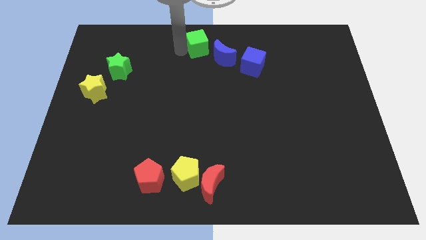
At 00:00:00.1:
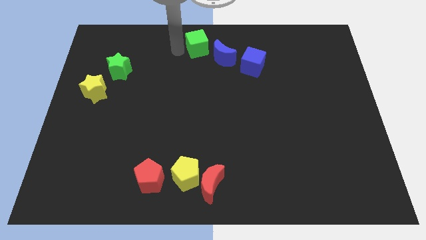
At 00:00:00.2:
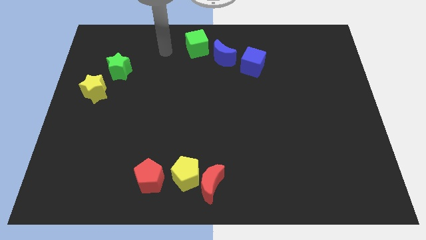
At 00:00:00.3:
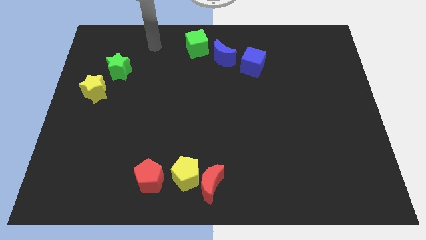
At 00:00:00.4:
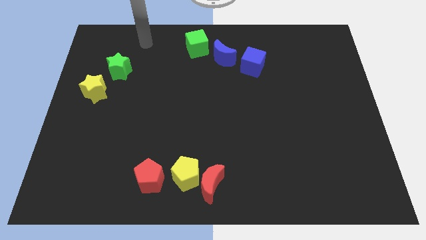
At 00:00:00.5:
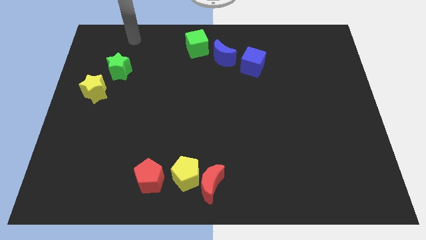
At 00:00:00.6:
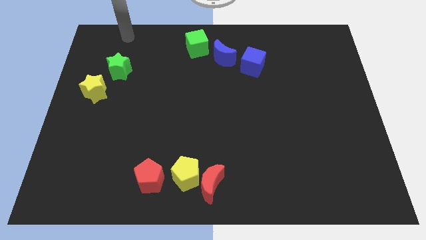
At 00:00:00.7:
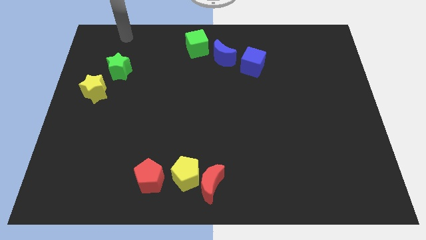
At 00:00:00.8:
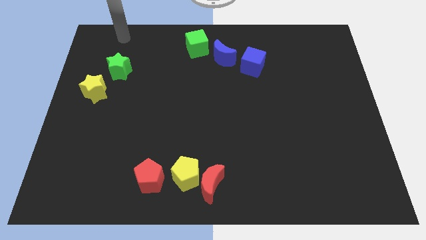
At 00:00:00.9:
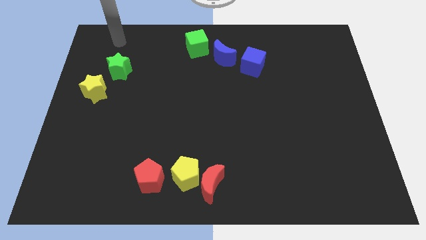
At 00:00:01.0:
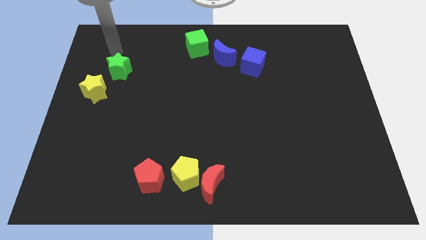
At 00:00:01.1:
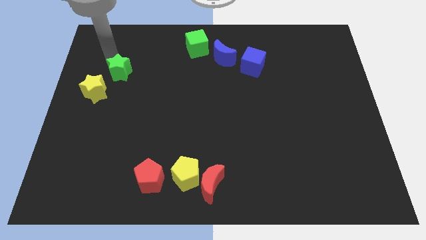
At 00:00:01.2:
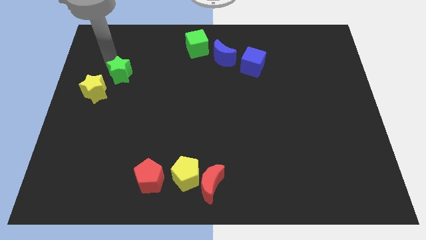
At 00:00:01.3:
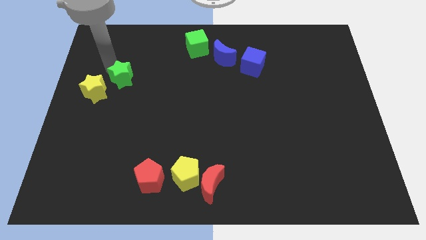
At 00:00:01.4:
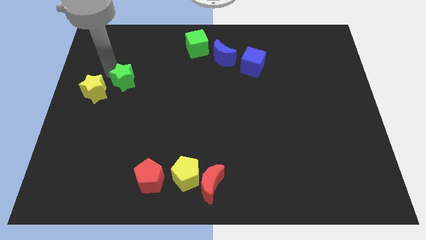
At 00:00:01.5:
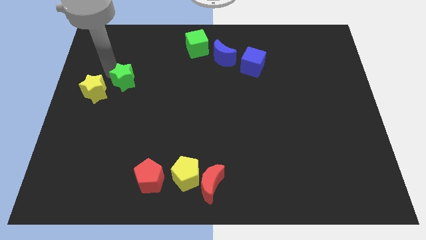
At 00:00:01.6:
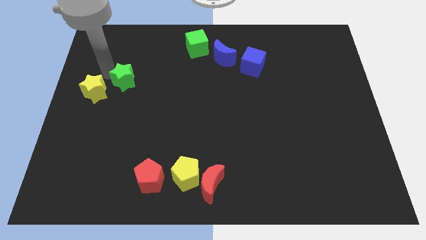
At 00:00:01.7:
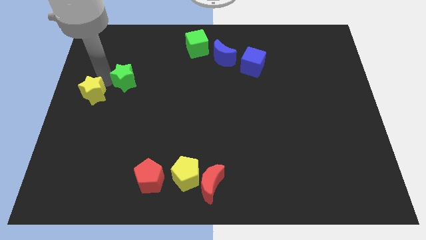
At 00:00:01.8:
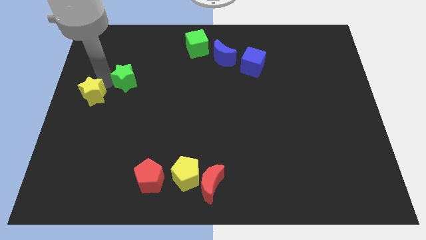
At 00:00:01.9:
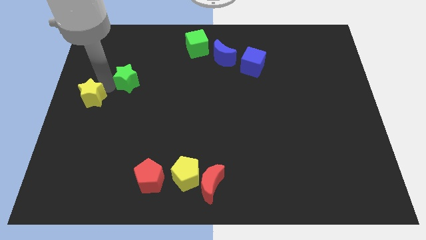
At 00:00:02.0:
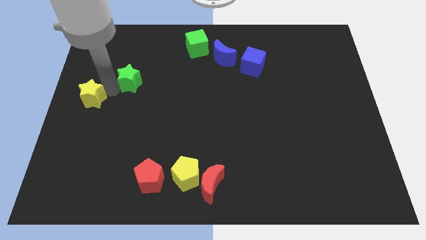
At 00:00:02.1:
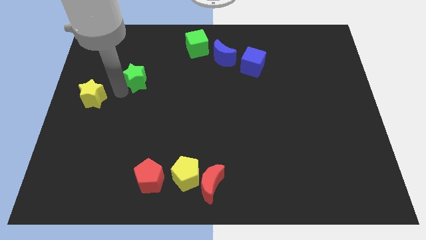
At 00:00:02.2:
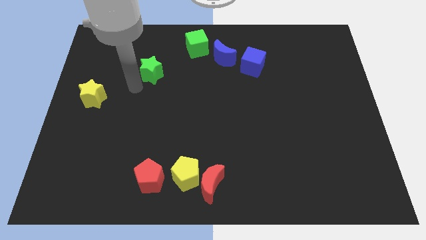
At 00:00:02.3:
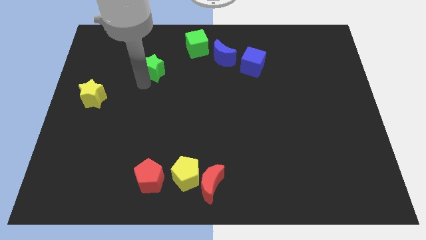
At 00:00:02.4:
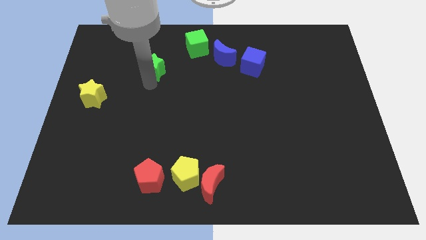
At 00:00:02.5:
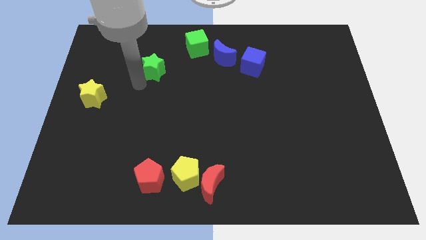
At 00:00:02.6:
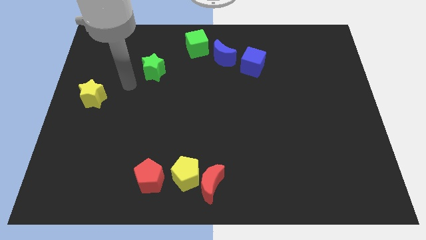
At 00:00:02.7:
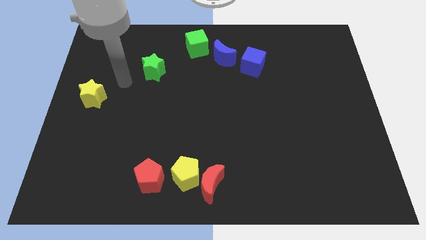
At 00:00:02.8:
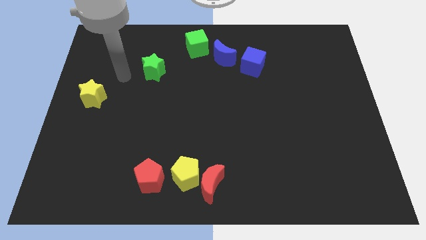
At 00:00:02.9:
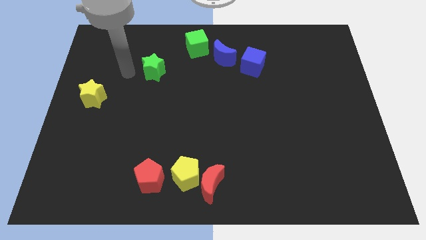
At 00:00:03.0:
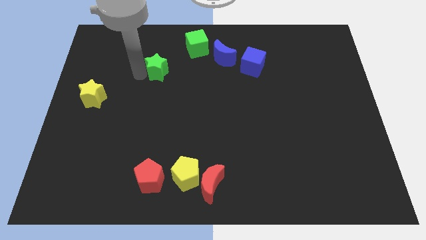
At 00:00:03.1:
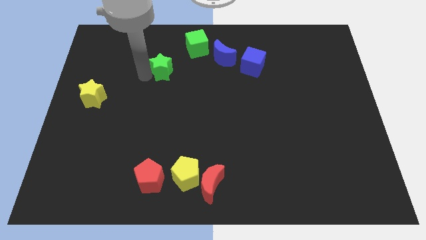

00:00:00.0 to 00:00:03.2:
separate the green star from the yellow star

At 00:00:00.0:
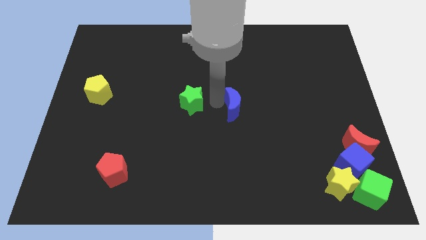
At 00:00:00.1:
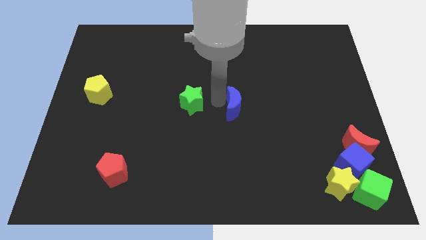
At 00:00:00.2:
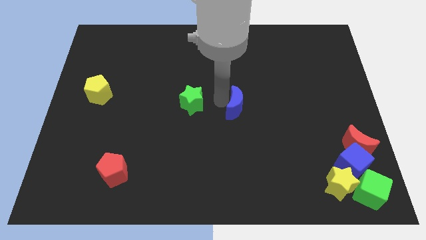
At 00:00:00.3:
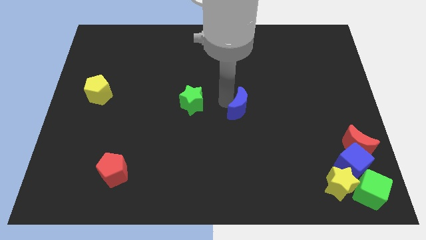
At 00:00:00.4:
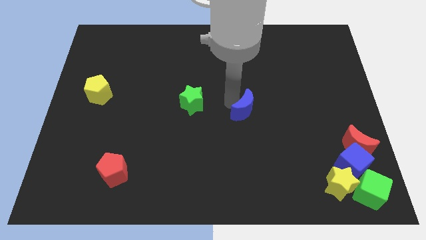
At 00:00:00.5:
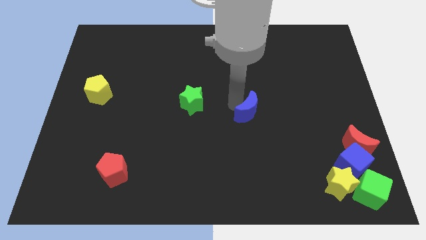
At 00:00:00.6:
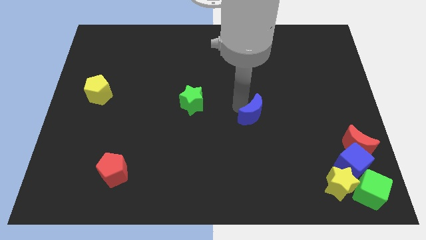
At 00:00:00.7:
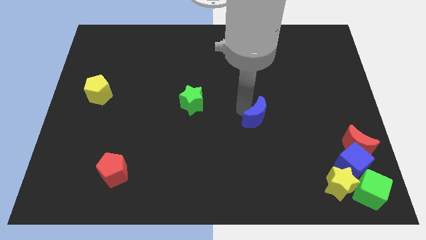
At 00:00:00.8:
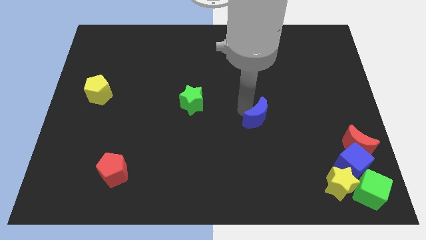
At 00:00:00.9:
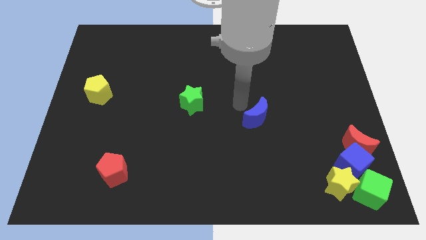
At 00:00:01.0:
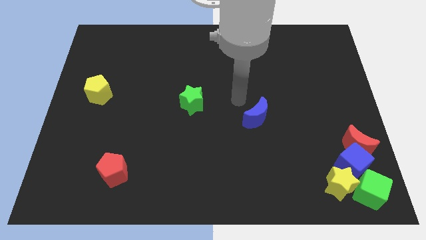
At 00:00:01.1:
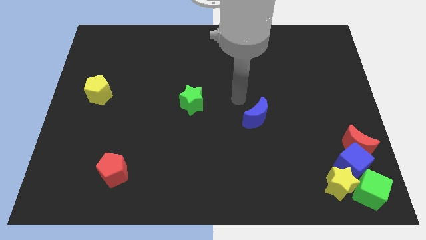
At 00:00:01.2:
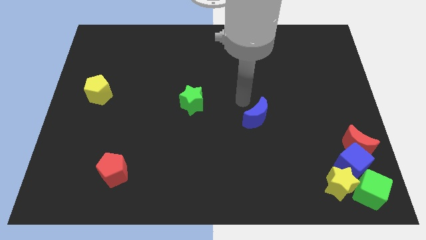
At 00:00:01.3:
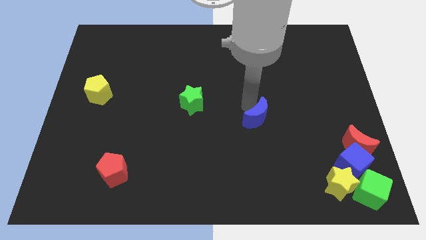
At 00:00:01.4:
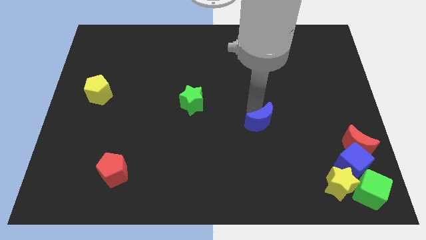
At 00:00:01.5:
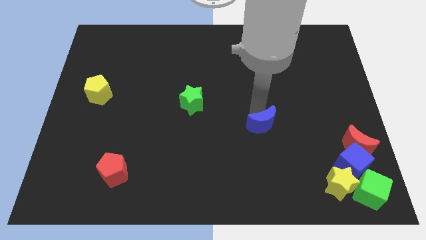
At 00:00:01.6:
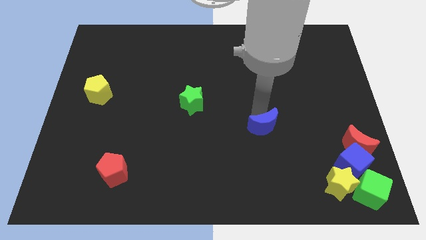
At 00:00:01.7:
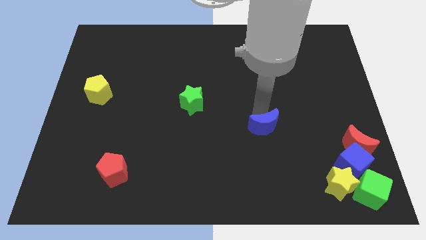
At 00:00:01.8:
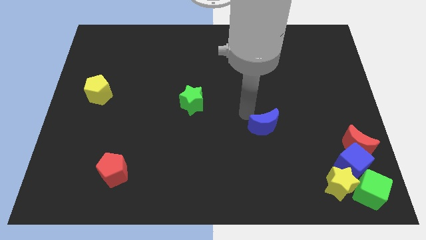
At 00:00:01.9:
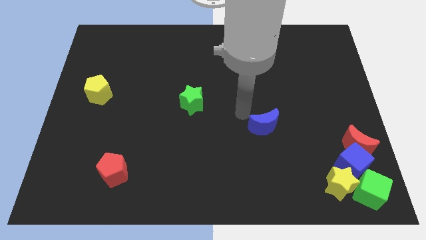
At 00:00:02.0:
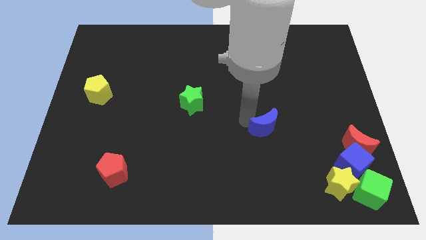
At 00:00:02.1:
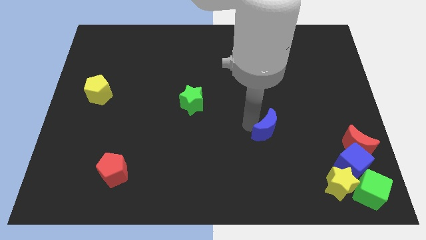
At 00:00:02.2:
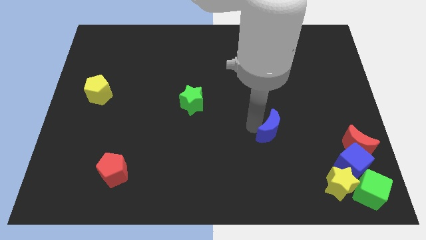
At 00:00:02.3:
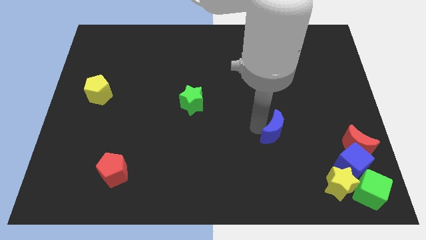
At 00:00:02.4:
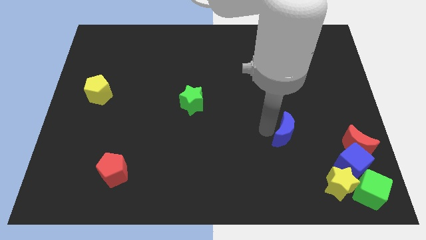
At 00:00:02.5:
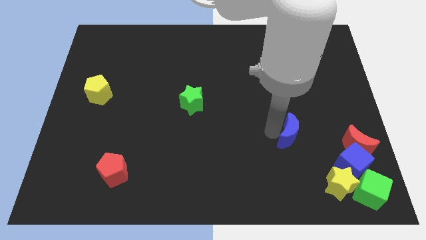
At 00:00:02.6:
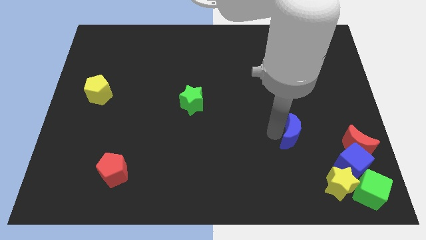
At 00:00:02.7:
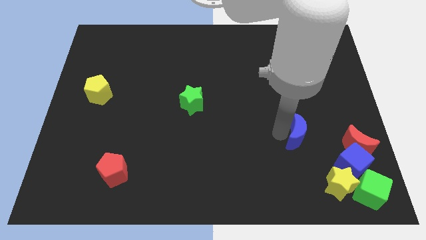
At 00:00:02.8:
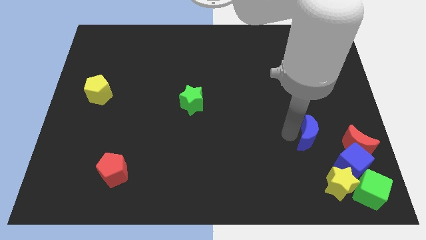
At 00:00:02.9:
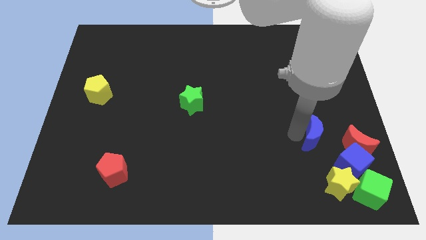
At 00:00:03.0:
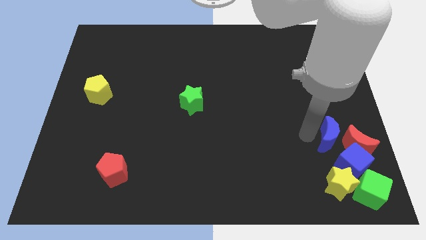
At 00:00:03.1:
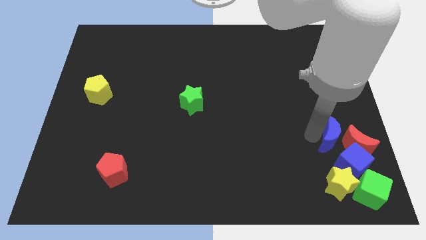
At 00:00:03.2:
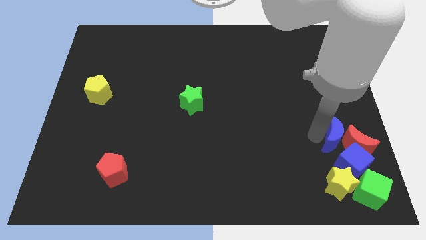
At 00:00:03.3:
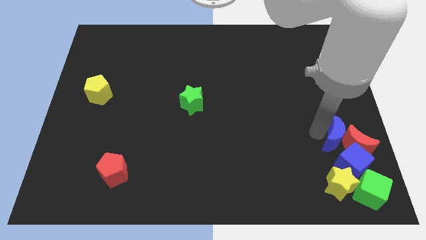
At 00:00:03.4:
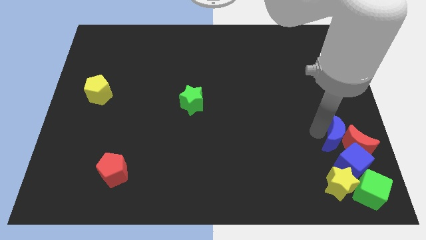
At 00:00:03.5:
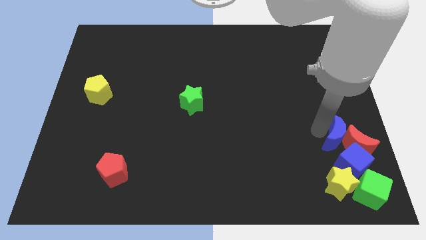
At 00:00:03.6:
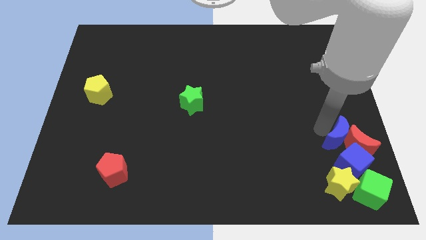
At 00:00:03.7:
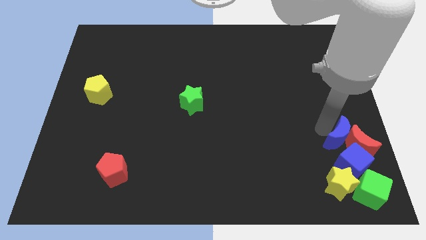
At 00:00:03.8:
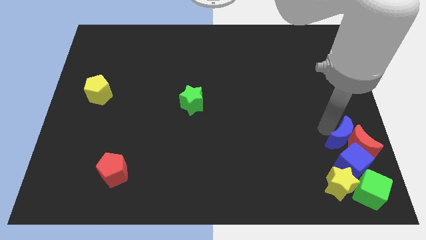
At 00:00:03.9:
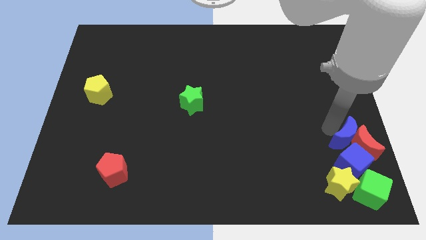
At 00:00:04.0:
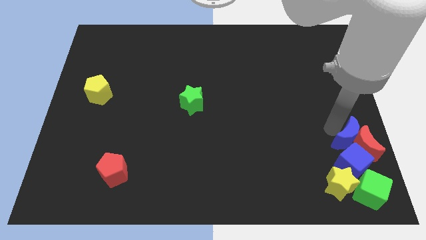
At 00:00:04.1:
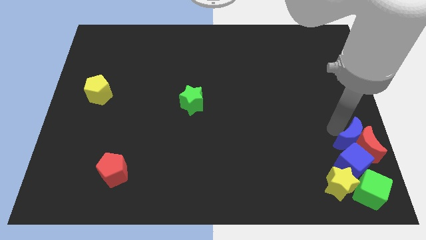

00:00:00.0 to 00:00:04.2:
place blue moon on top of blue cube

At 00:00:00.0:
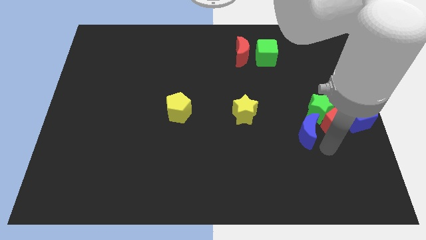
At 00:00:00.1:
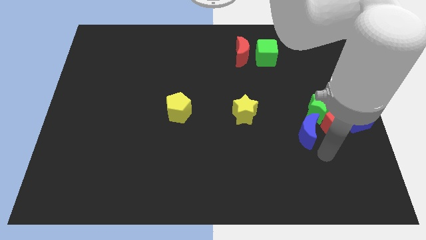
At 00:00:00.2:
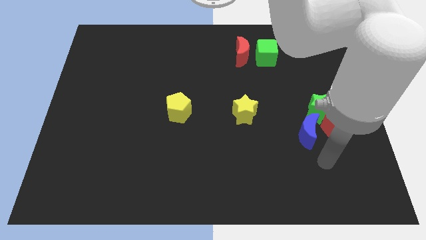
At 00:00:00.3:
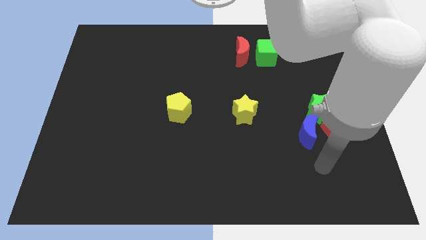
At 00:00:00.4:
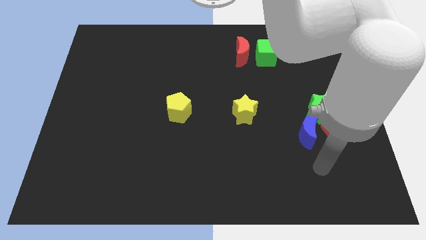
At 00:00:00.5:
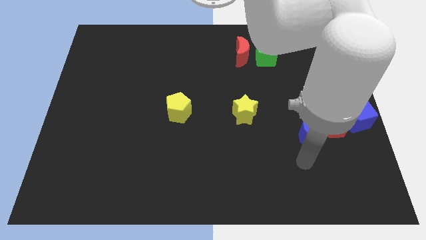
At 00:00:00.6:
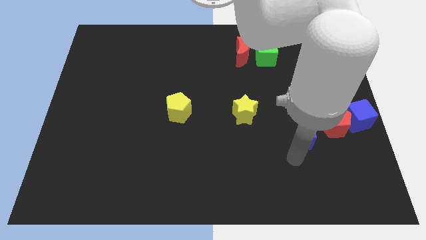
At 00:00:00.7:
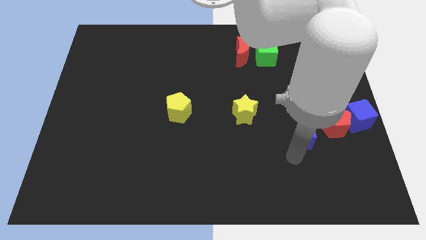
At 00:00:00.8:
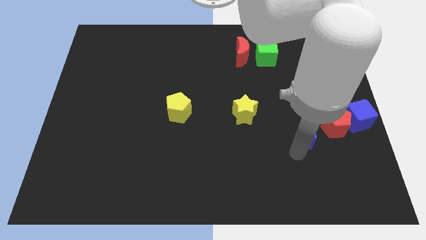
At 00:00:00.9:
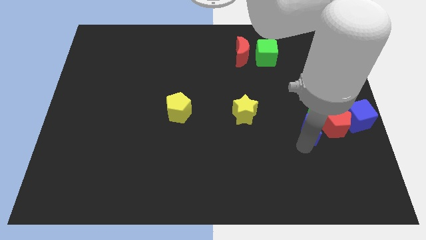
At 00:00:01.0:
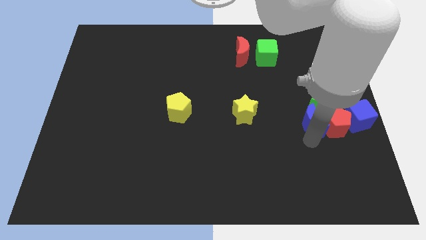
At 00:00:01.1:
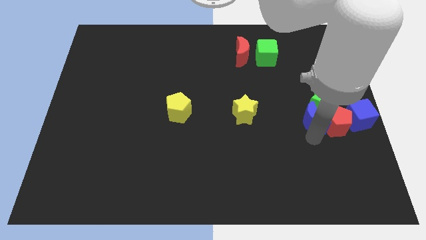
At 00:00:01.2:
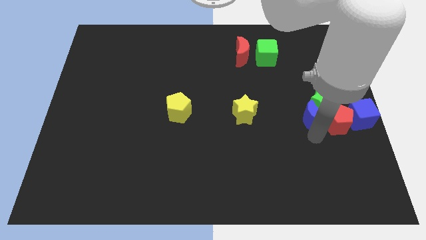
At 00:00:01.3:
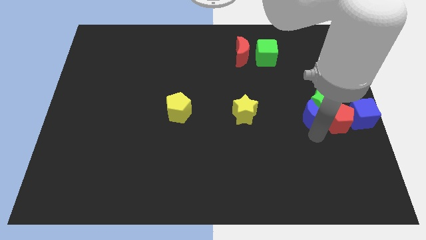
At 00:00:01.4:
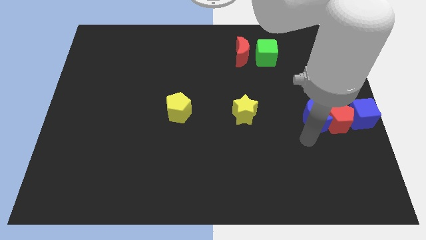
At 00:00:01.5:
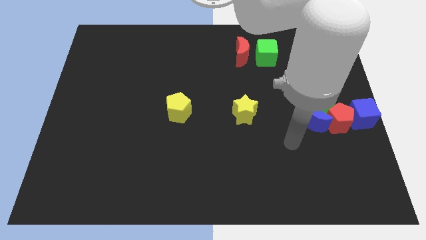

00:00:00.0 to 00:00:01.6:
push the blue crescent towards the group of blocks to the right centre of the board
